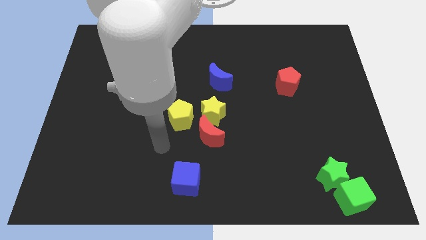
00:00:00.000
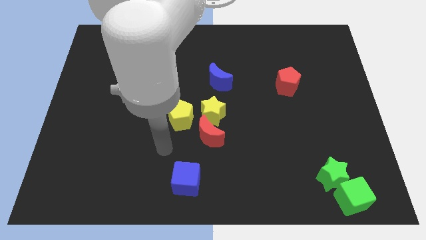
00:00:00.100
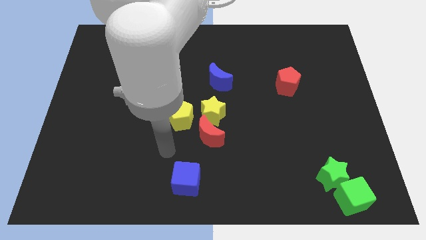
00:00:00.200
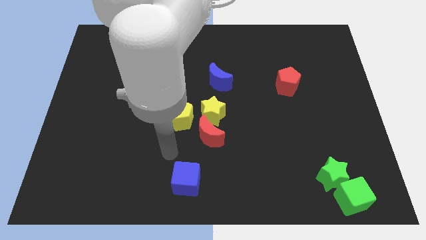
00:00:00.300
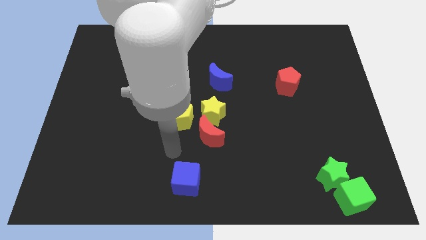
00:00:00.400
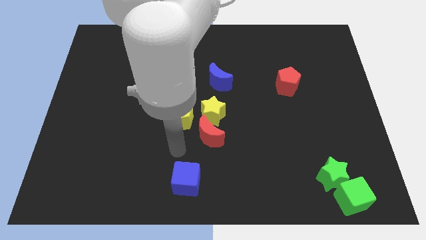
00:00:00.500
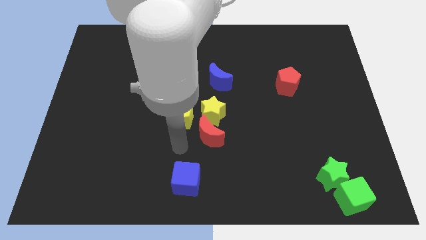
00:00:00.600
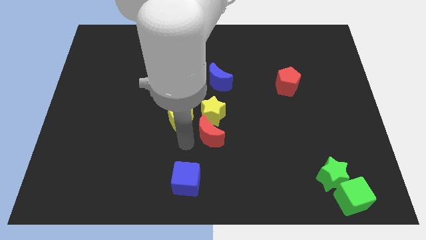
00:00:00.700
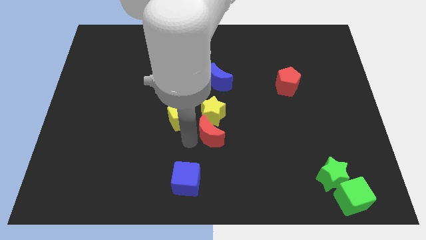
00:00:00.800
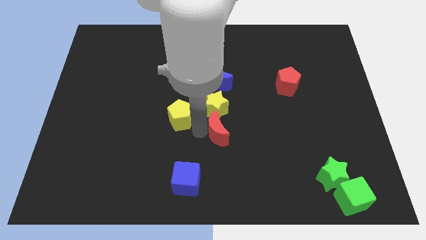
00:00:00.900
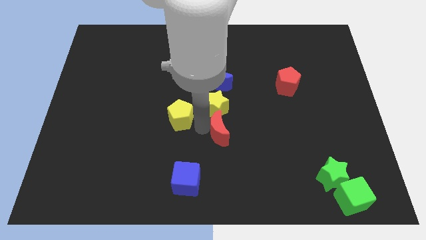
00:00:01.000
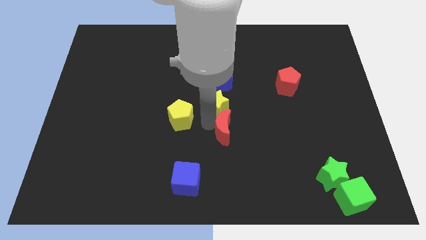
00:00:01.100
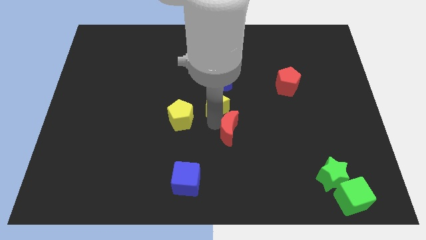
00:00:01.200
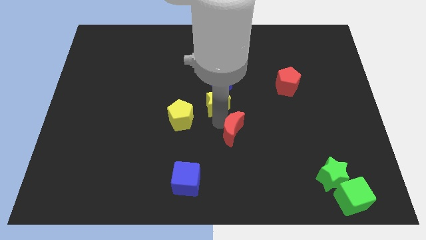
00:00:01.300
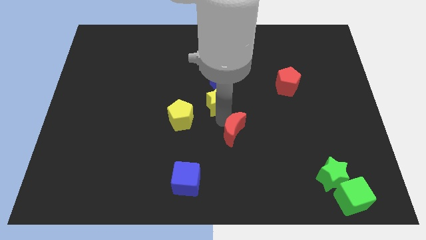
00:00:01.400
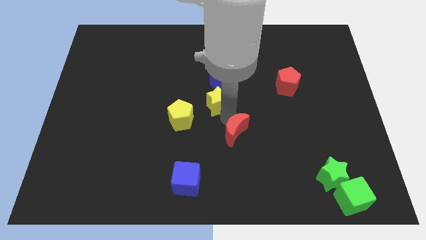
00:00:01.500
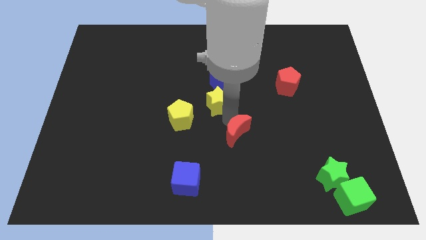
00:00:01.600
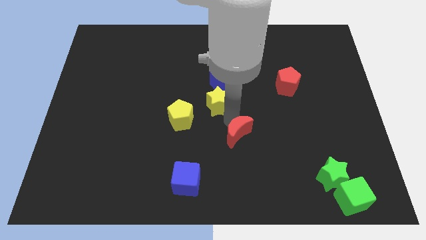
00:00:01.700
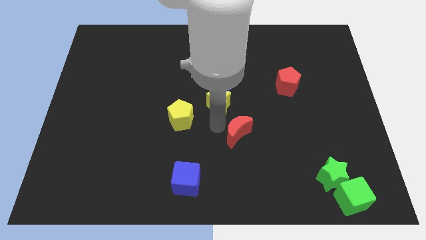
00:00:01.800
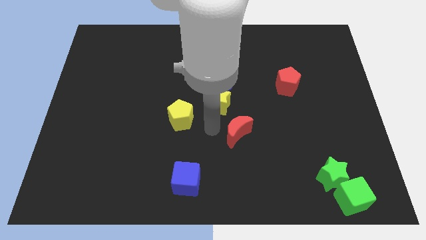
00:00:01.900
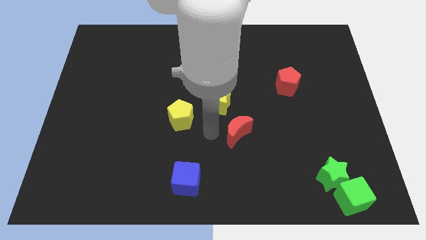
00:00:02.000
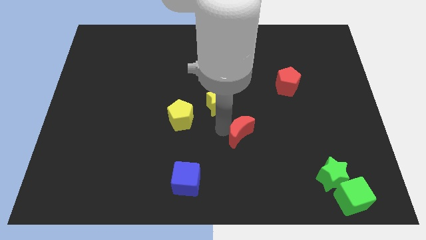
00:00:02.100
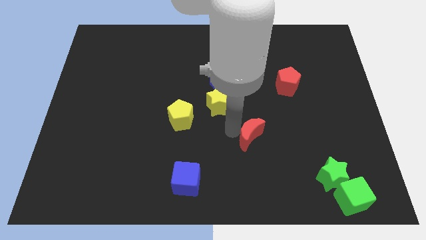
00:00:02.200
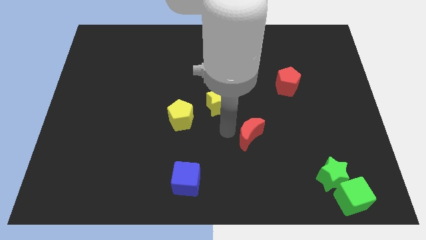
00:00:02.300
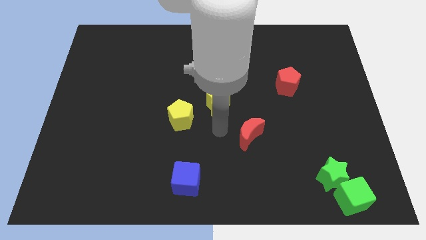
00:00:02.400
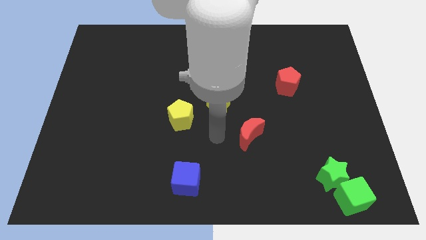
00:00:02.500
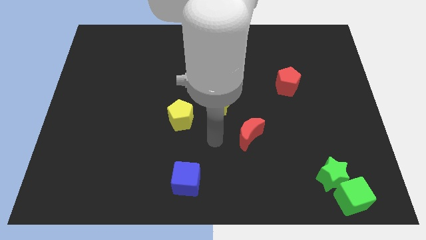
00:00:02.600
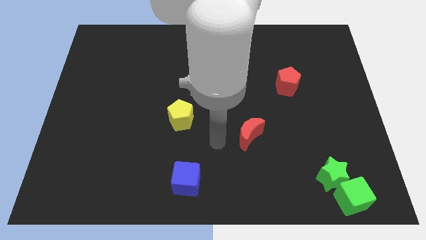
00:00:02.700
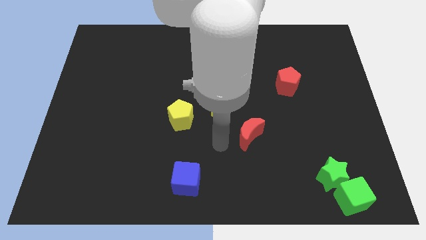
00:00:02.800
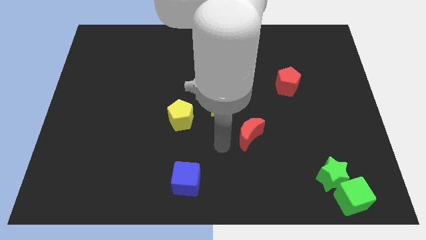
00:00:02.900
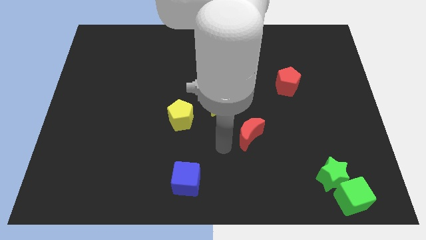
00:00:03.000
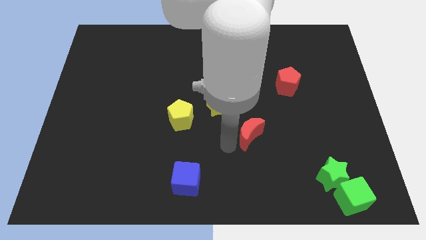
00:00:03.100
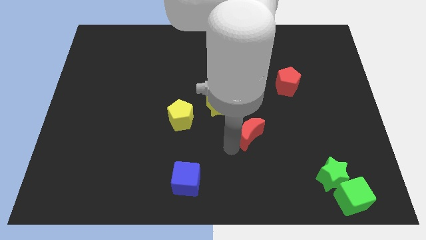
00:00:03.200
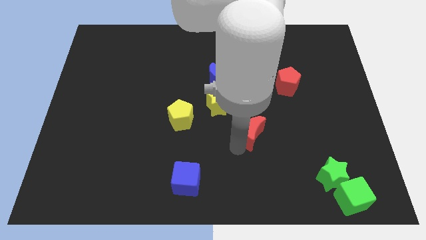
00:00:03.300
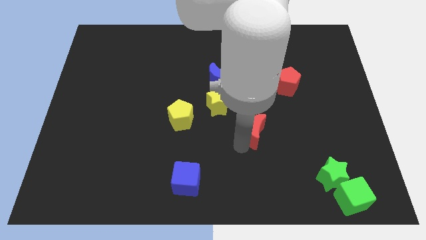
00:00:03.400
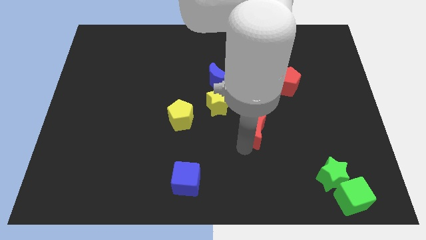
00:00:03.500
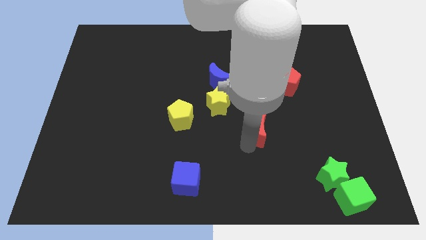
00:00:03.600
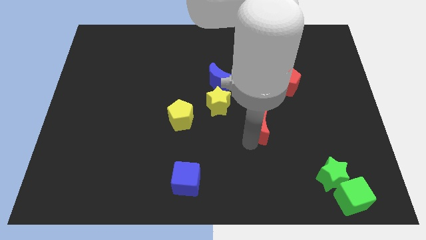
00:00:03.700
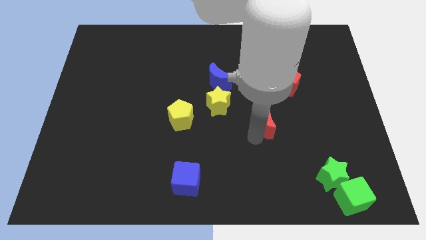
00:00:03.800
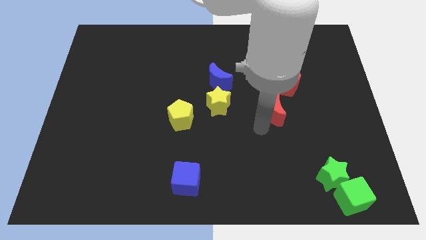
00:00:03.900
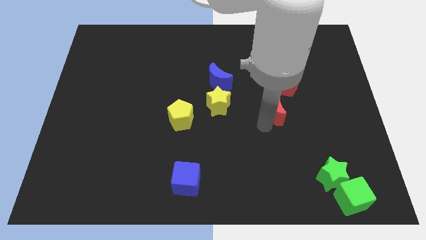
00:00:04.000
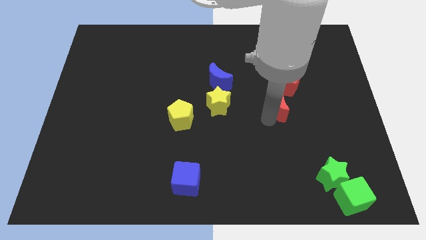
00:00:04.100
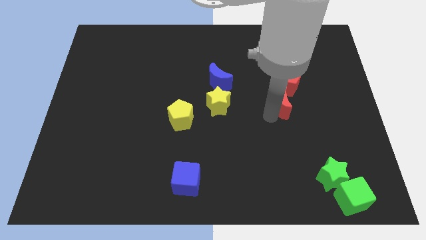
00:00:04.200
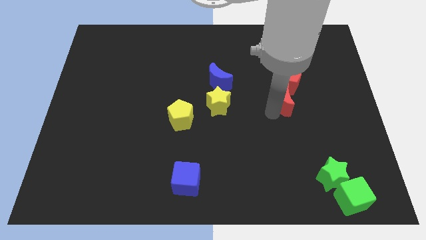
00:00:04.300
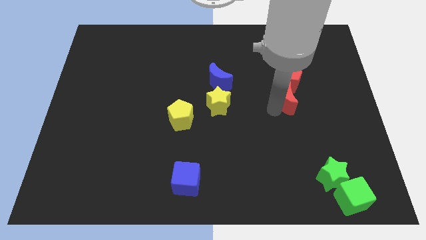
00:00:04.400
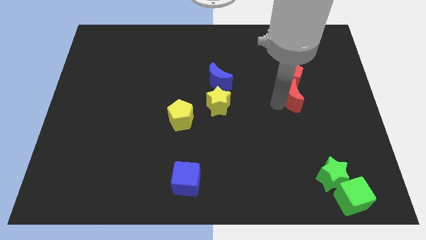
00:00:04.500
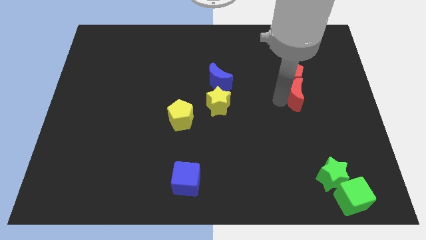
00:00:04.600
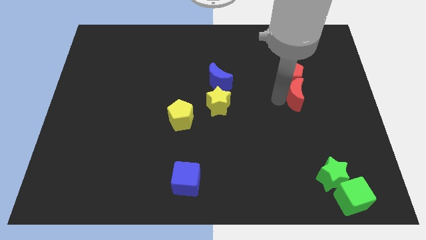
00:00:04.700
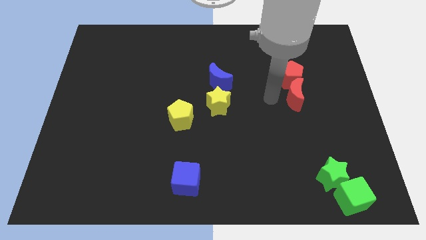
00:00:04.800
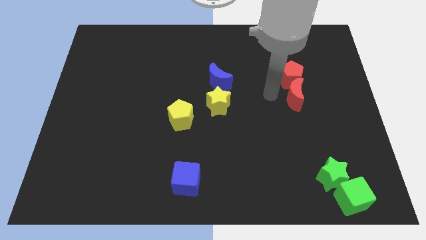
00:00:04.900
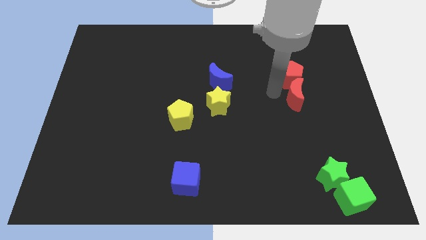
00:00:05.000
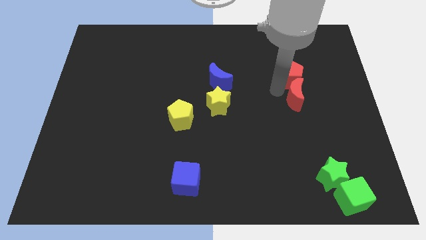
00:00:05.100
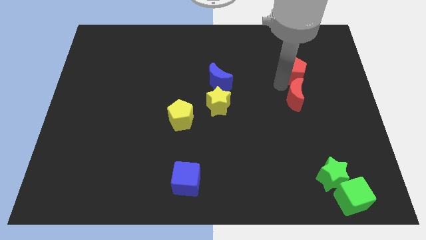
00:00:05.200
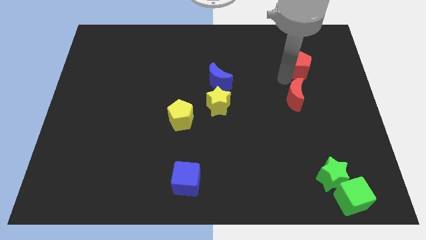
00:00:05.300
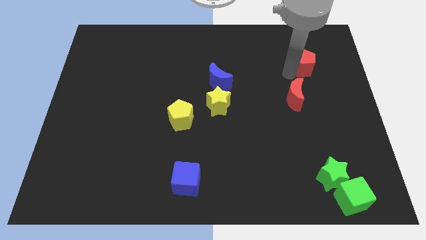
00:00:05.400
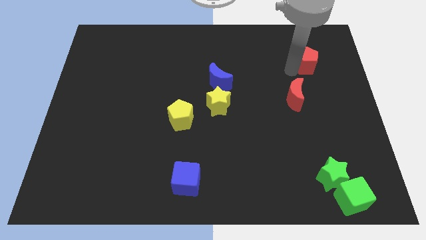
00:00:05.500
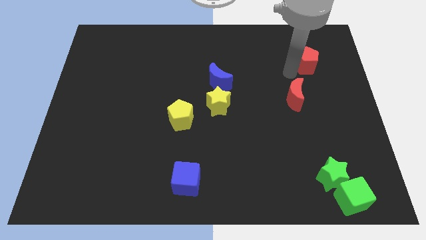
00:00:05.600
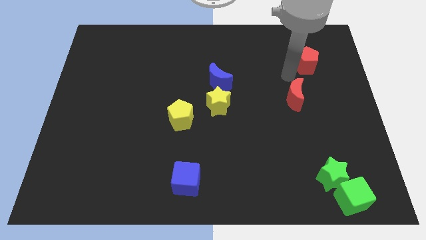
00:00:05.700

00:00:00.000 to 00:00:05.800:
move the red crescent bottom of the red pentagon

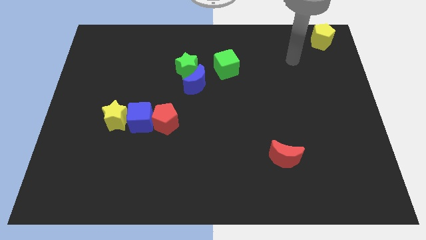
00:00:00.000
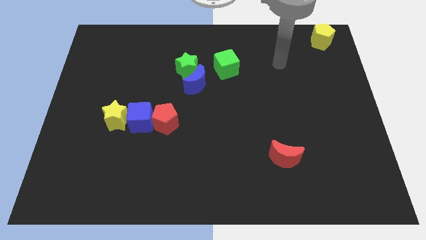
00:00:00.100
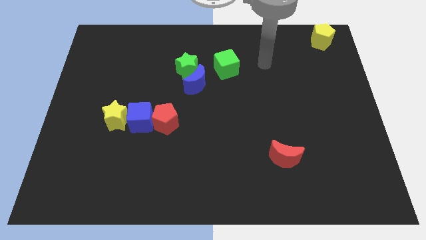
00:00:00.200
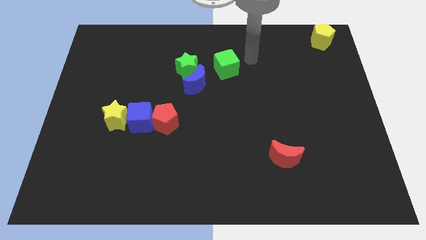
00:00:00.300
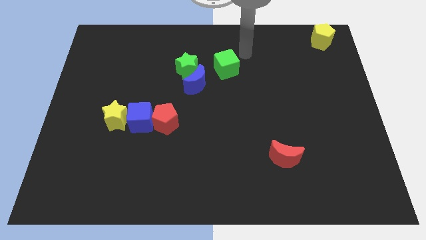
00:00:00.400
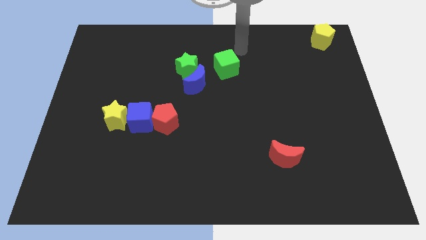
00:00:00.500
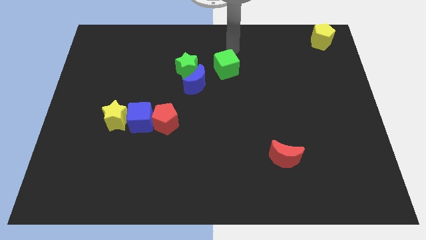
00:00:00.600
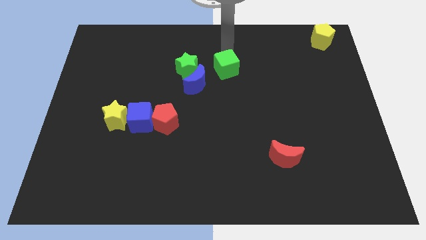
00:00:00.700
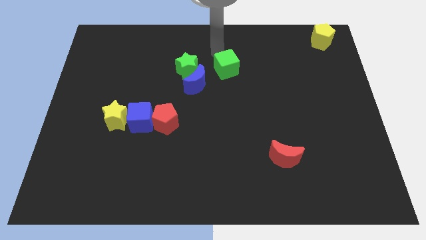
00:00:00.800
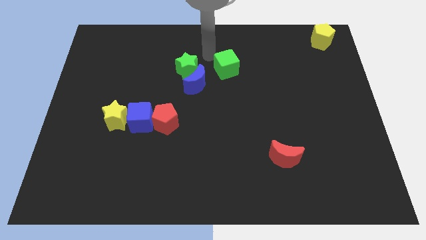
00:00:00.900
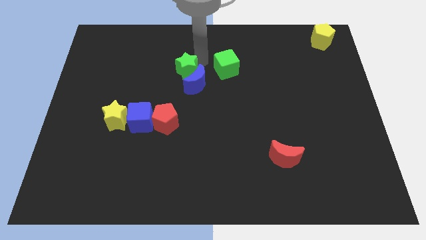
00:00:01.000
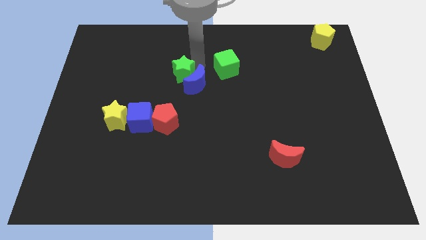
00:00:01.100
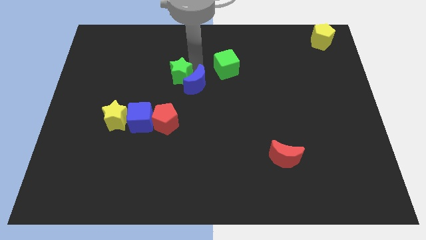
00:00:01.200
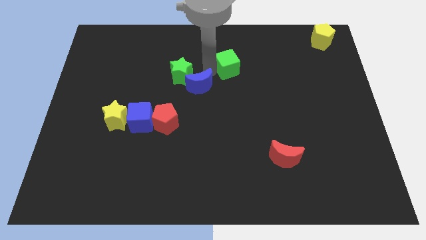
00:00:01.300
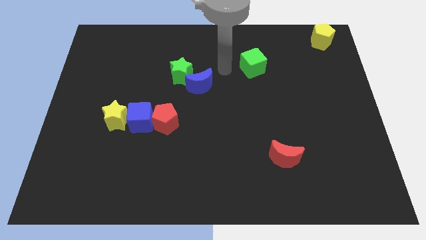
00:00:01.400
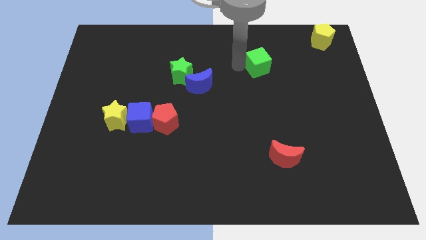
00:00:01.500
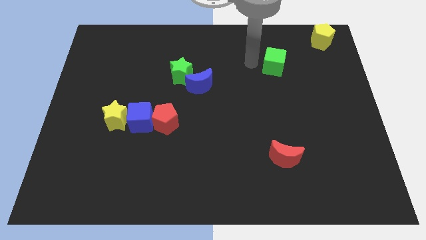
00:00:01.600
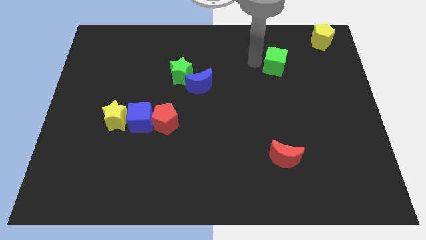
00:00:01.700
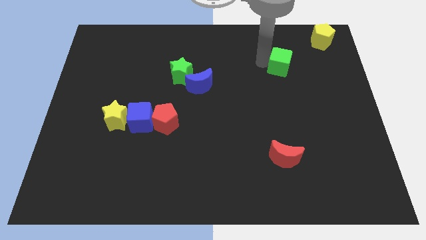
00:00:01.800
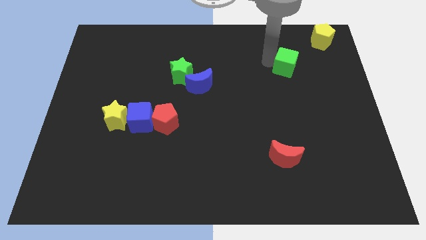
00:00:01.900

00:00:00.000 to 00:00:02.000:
put the green cube diagonally below the bottom left side of the yellow pentagon

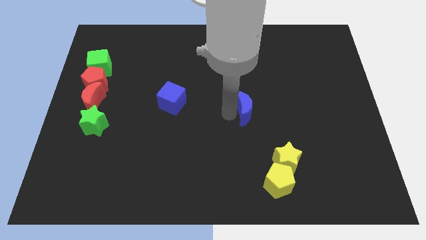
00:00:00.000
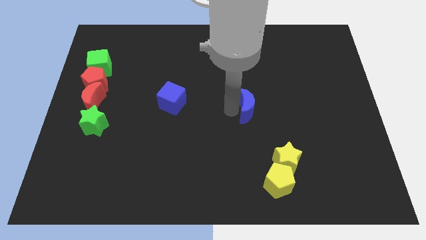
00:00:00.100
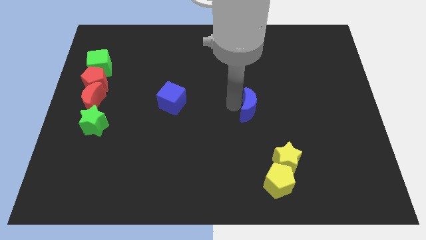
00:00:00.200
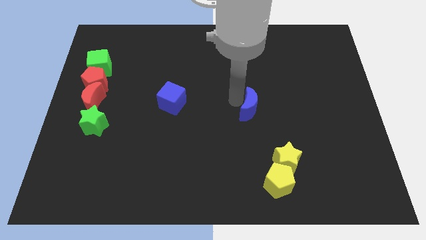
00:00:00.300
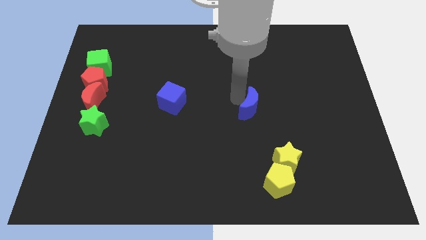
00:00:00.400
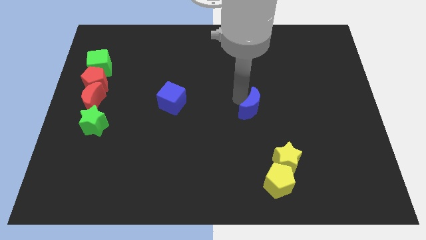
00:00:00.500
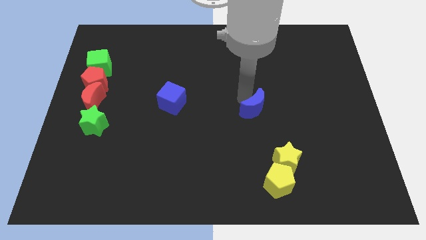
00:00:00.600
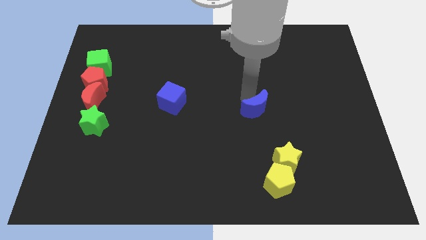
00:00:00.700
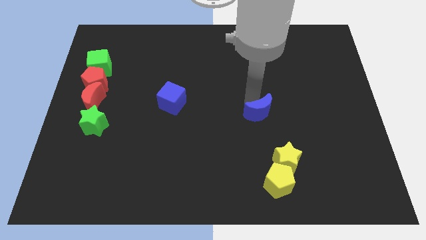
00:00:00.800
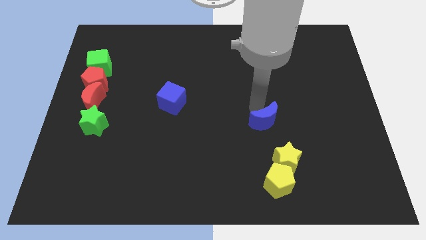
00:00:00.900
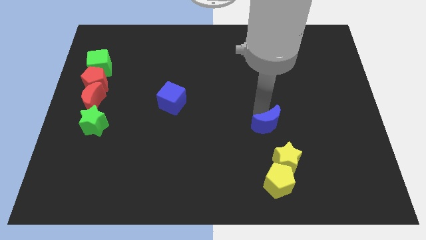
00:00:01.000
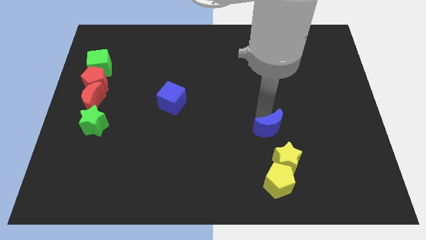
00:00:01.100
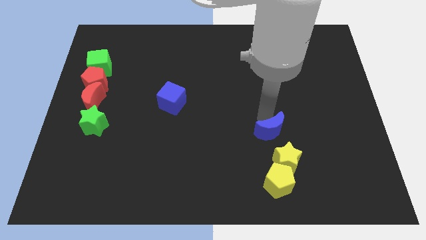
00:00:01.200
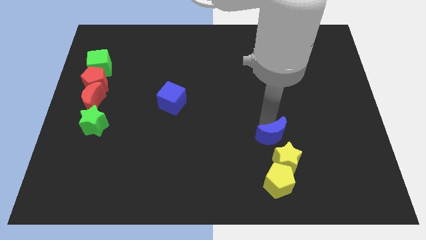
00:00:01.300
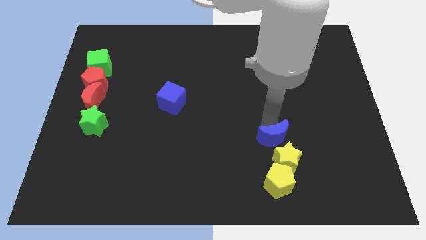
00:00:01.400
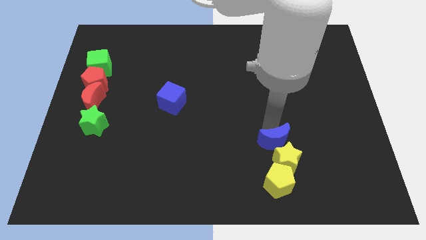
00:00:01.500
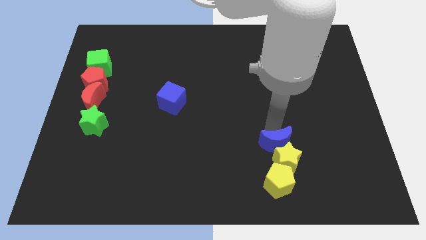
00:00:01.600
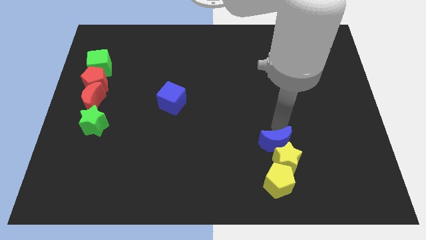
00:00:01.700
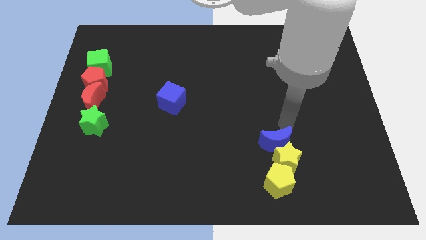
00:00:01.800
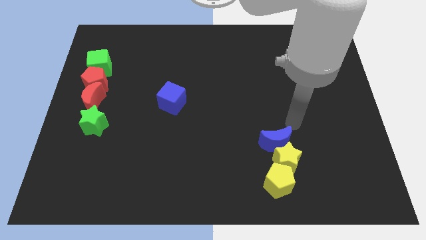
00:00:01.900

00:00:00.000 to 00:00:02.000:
place the blue crescent above the yellow star
